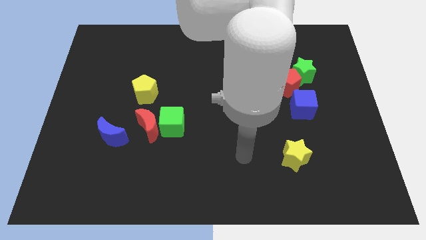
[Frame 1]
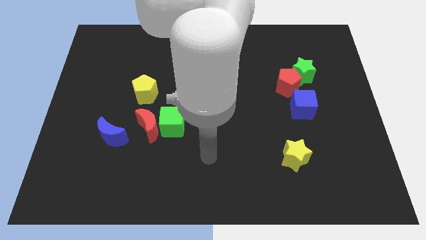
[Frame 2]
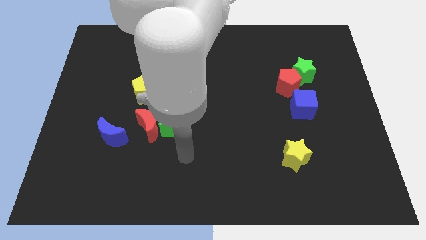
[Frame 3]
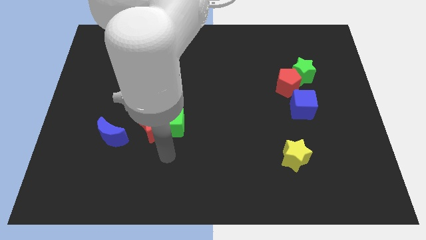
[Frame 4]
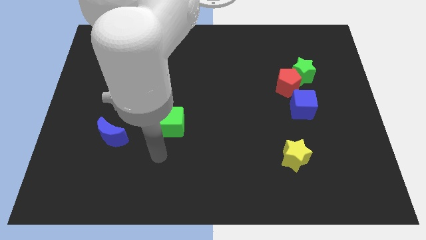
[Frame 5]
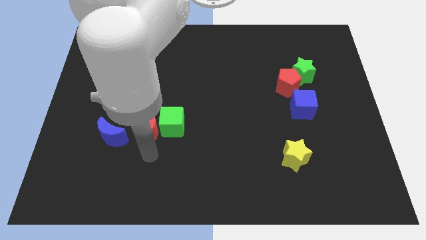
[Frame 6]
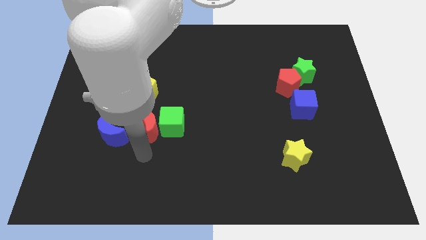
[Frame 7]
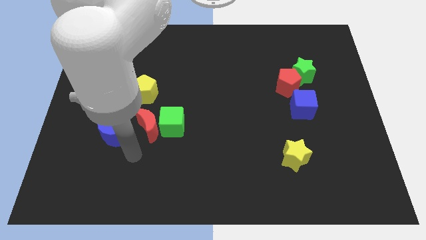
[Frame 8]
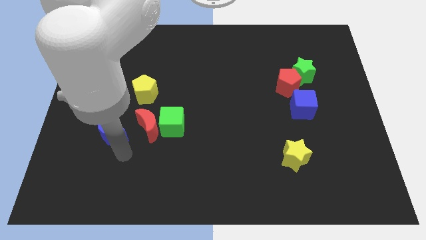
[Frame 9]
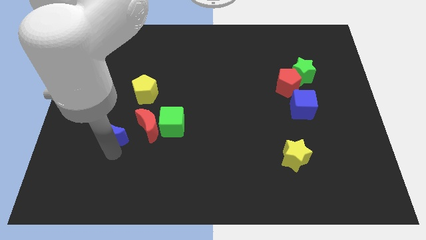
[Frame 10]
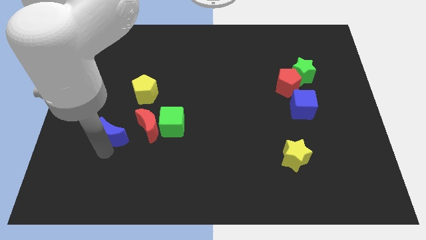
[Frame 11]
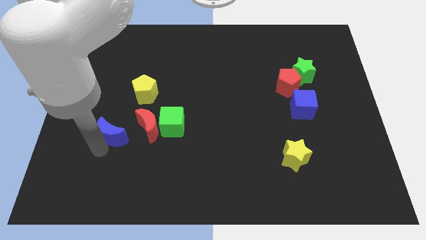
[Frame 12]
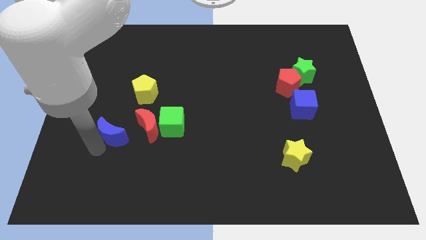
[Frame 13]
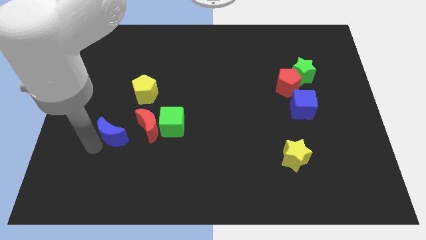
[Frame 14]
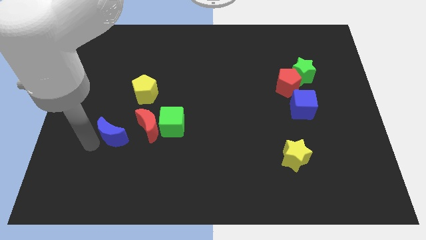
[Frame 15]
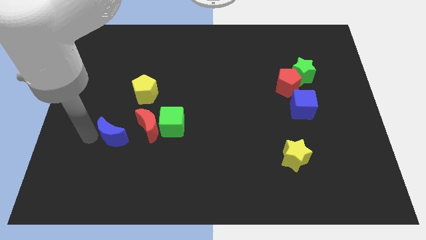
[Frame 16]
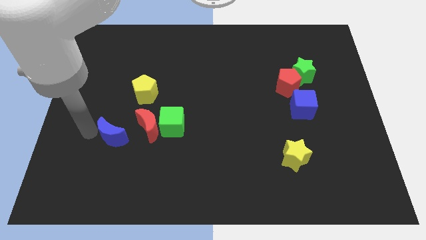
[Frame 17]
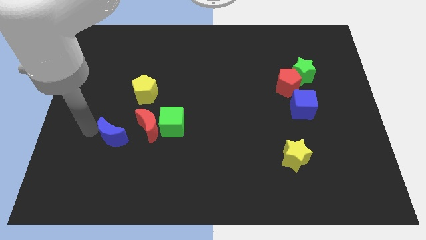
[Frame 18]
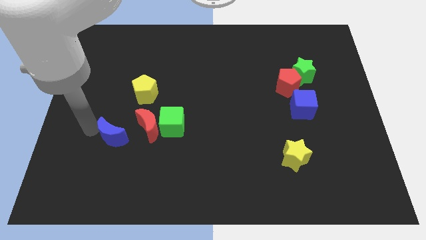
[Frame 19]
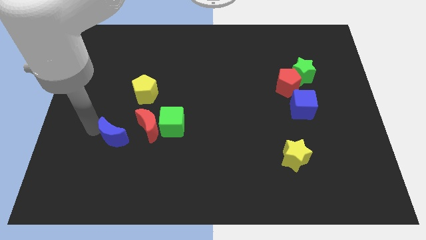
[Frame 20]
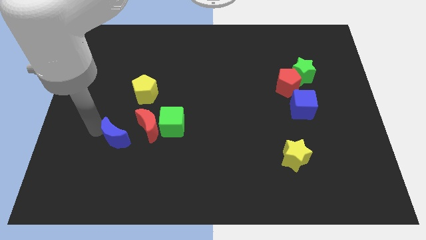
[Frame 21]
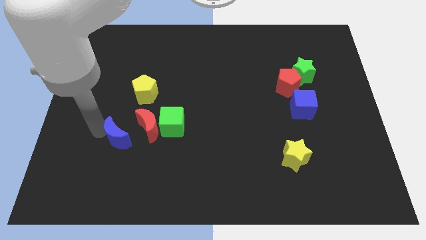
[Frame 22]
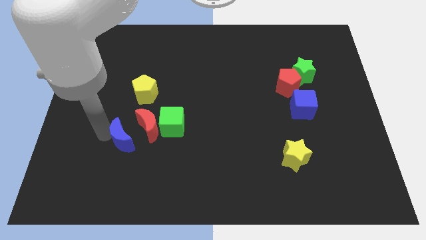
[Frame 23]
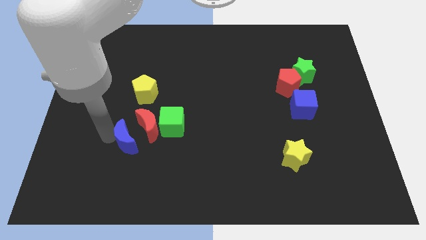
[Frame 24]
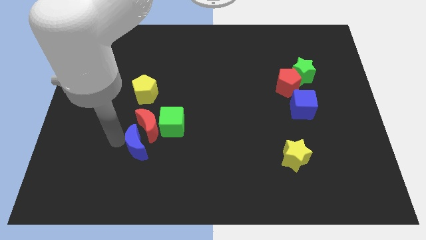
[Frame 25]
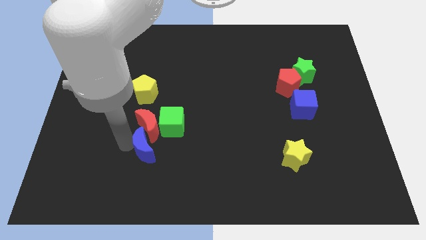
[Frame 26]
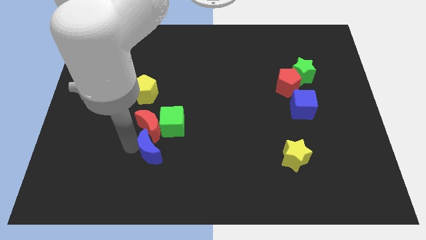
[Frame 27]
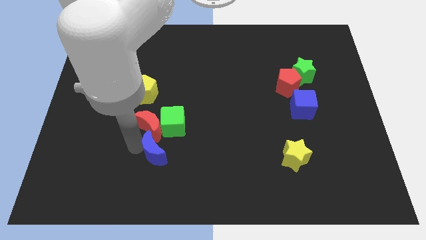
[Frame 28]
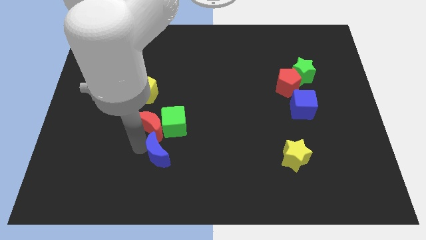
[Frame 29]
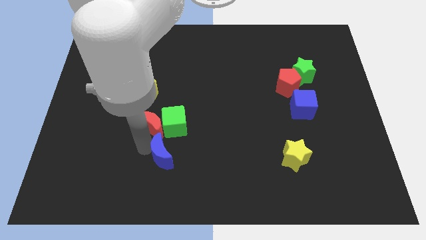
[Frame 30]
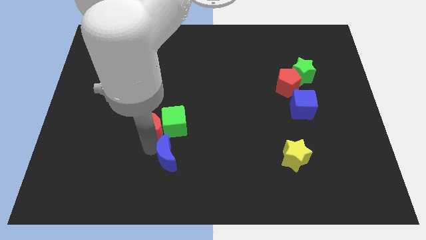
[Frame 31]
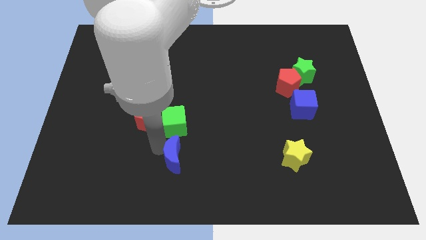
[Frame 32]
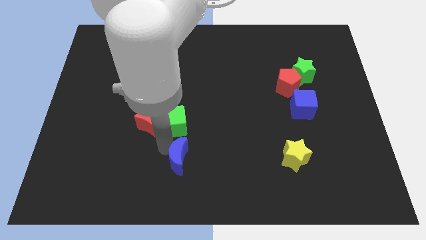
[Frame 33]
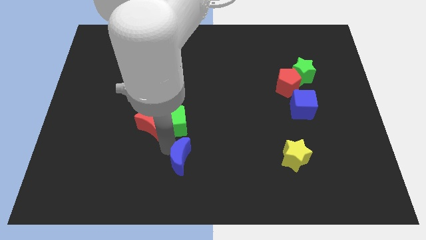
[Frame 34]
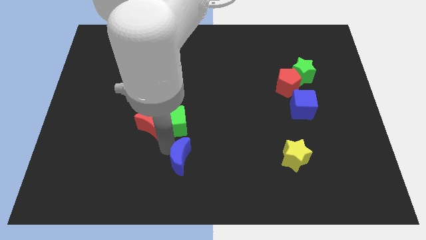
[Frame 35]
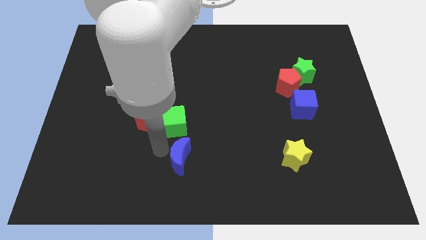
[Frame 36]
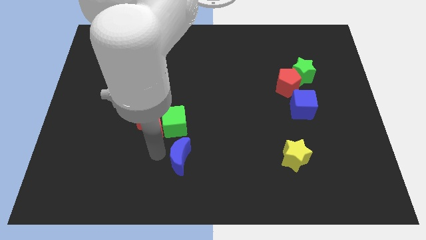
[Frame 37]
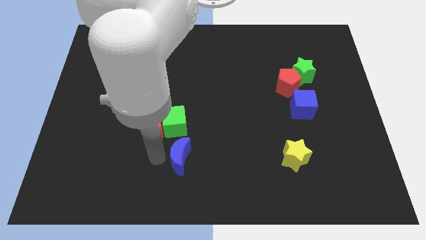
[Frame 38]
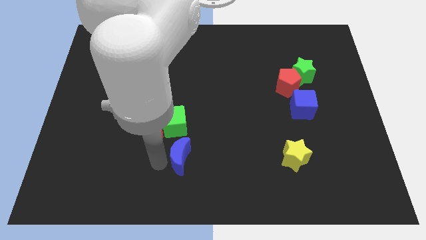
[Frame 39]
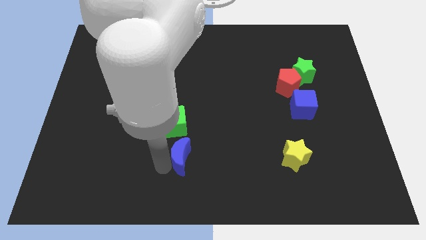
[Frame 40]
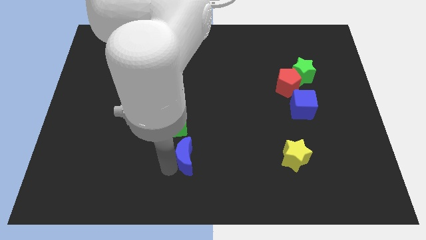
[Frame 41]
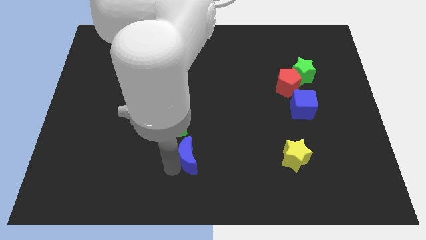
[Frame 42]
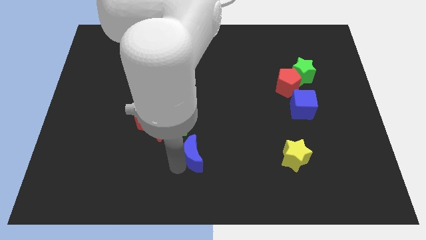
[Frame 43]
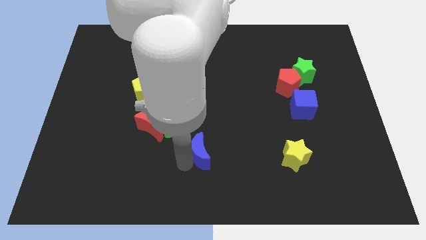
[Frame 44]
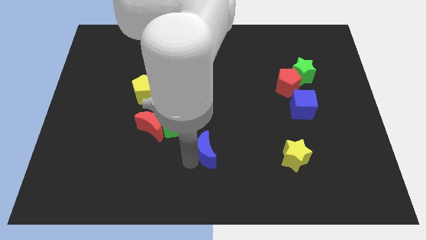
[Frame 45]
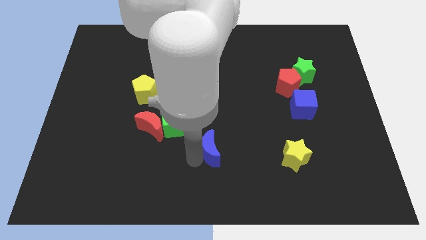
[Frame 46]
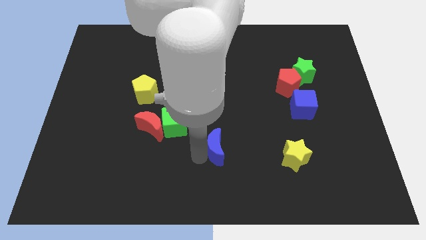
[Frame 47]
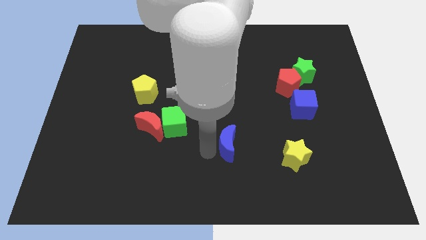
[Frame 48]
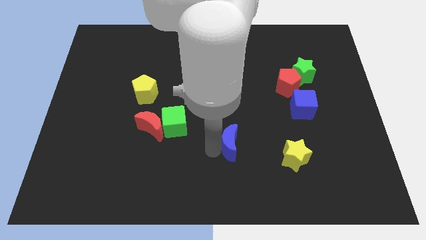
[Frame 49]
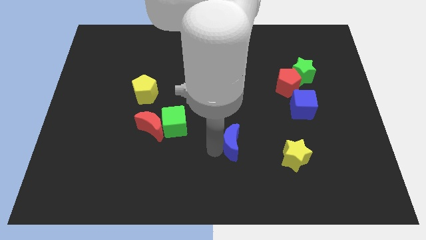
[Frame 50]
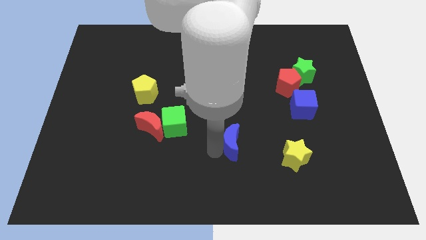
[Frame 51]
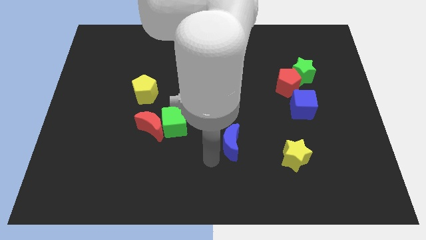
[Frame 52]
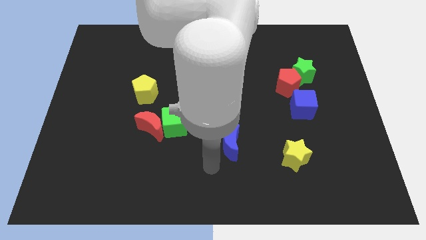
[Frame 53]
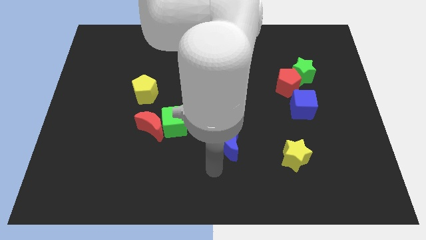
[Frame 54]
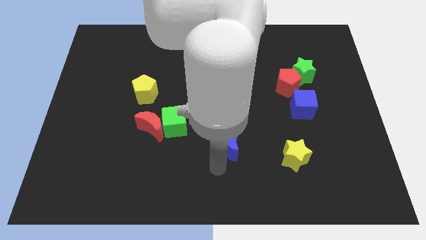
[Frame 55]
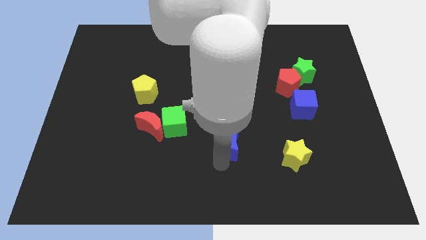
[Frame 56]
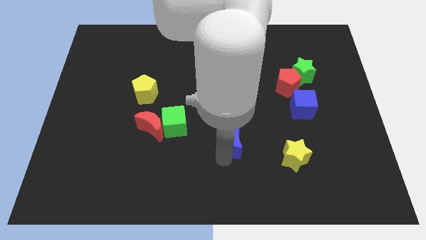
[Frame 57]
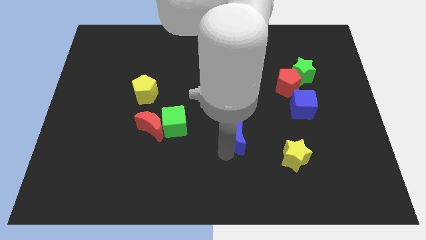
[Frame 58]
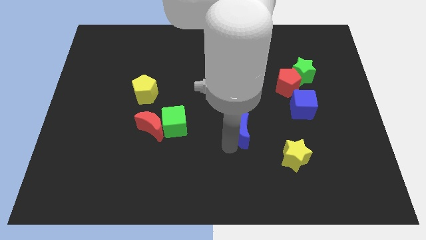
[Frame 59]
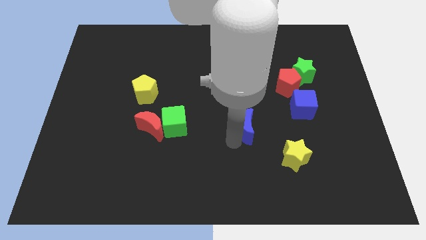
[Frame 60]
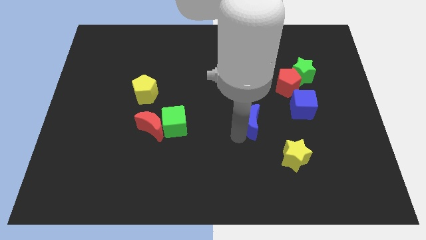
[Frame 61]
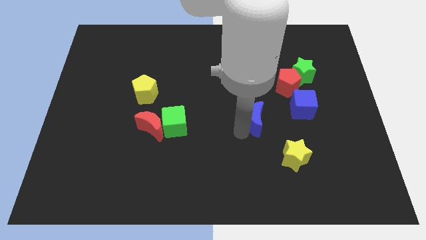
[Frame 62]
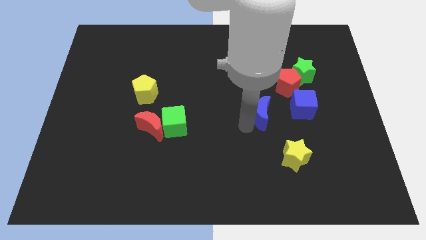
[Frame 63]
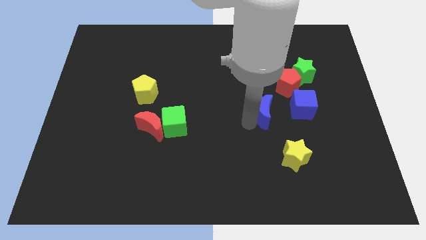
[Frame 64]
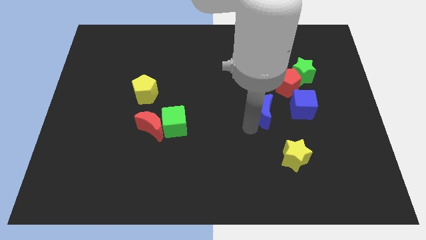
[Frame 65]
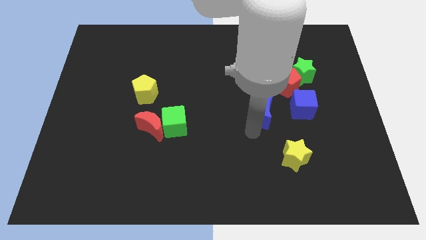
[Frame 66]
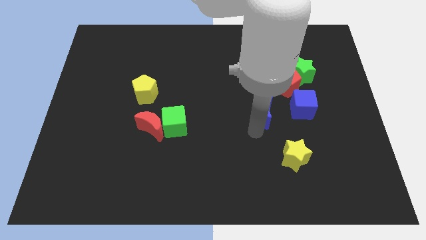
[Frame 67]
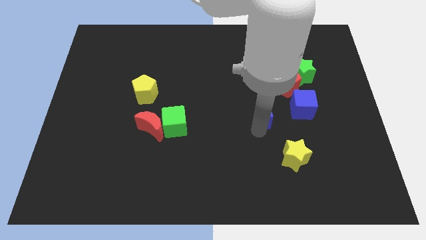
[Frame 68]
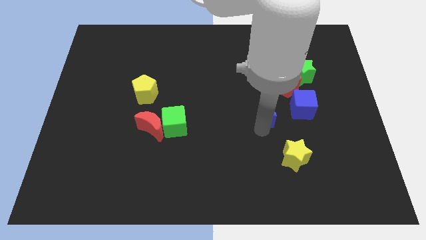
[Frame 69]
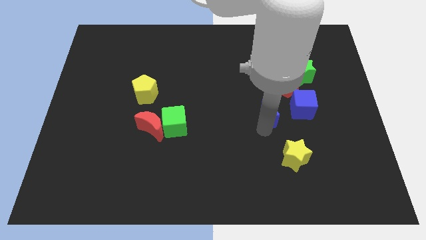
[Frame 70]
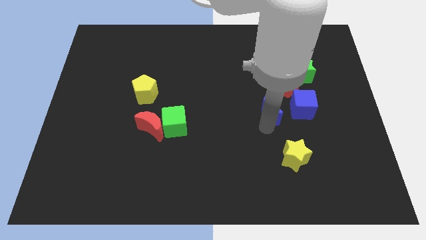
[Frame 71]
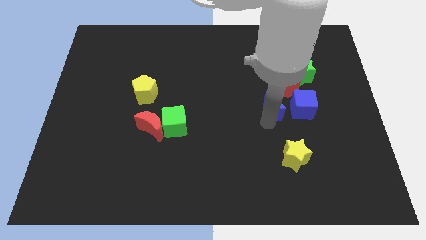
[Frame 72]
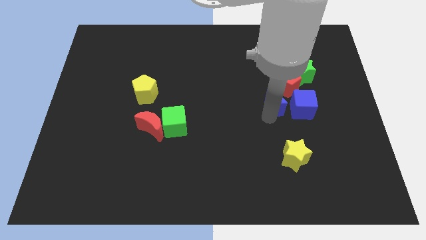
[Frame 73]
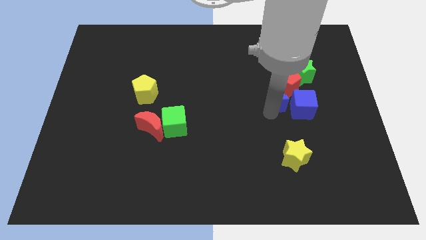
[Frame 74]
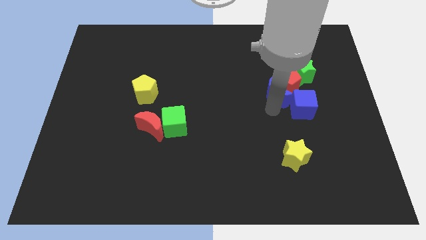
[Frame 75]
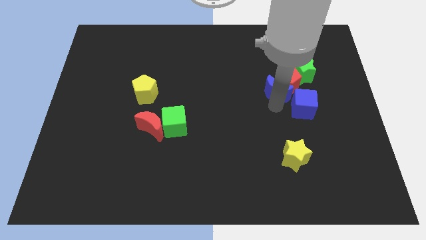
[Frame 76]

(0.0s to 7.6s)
move the blue moon close to the red pentagon

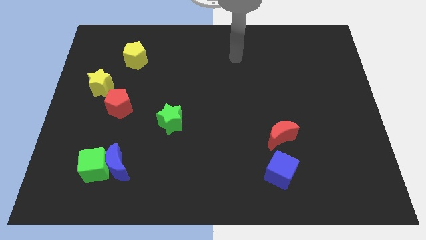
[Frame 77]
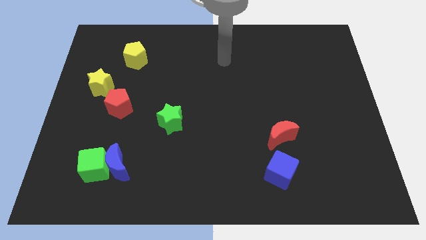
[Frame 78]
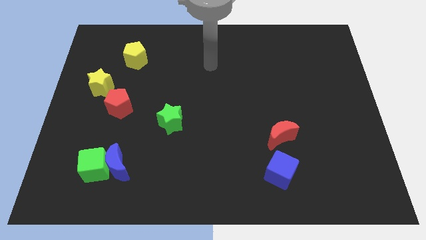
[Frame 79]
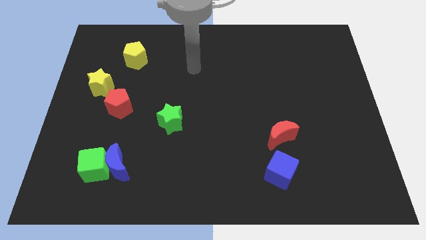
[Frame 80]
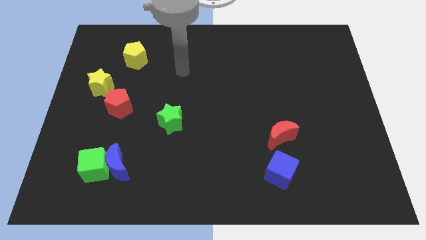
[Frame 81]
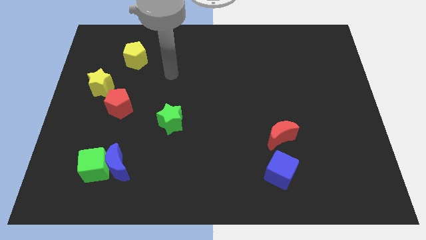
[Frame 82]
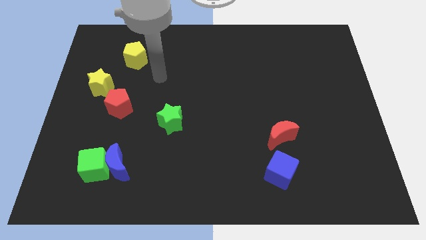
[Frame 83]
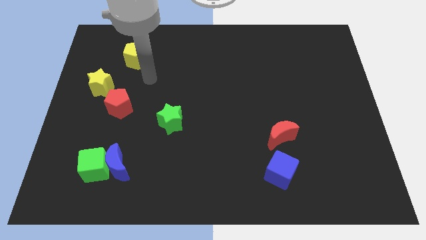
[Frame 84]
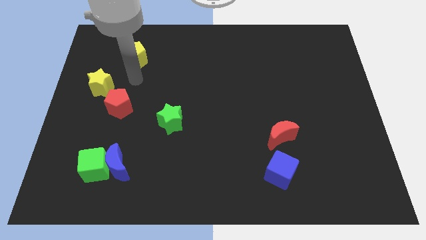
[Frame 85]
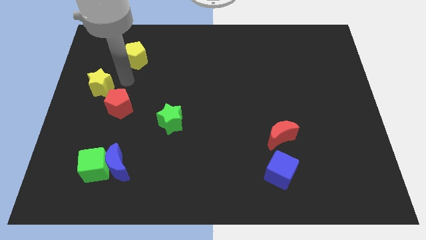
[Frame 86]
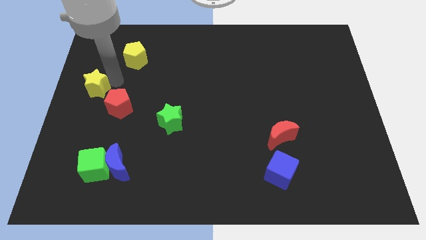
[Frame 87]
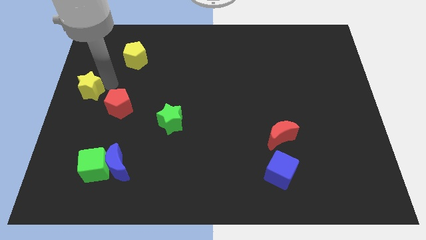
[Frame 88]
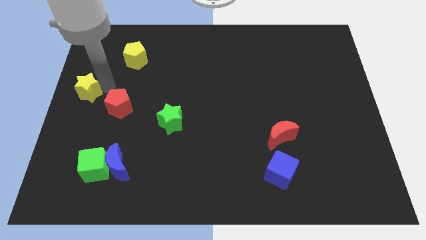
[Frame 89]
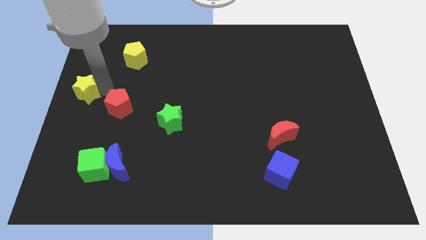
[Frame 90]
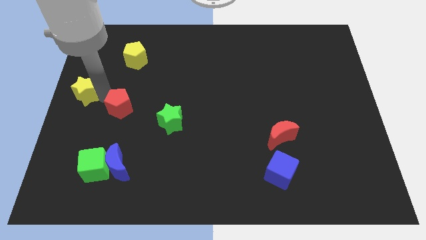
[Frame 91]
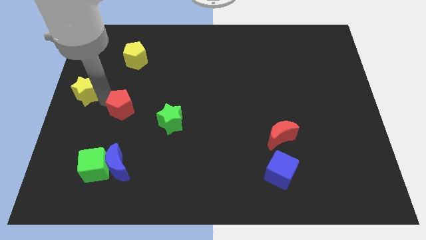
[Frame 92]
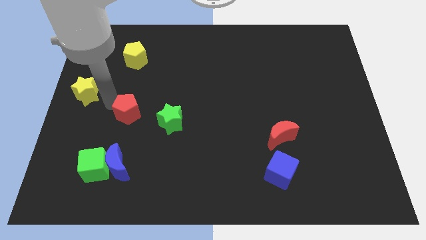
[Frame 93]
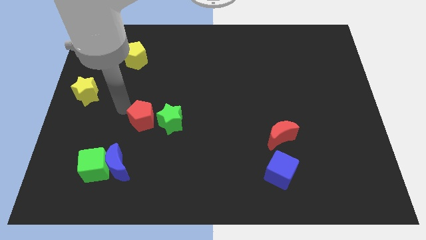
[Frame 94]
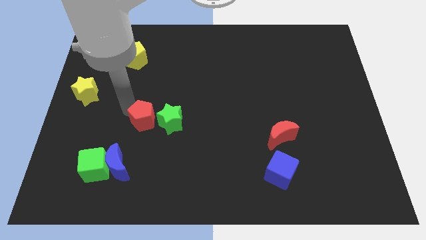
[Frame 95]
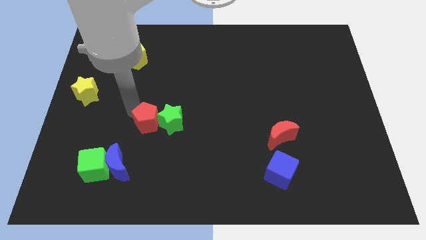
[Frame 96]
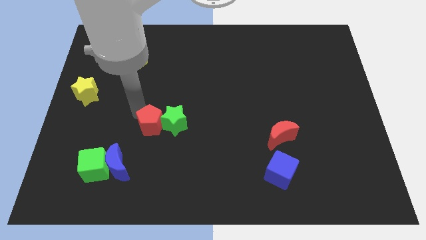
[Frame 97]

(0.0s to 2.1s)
move the red pentagon close to the green star
